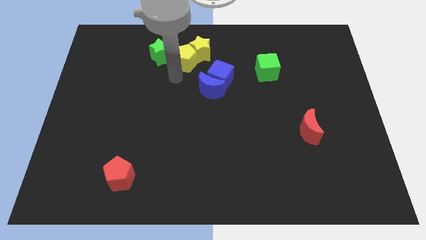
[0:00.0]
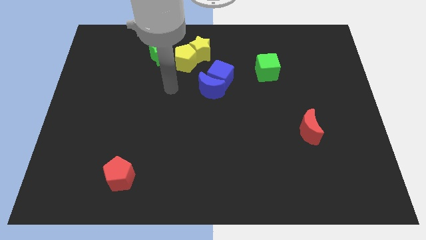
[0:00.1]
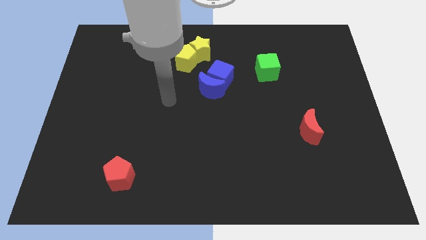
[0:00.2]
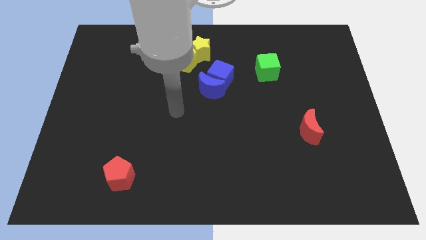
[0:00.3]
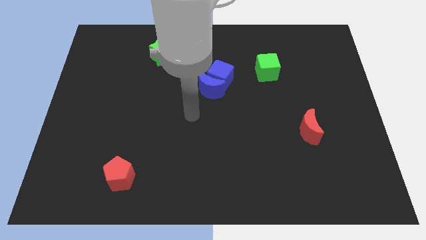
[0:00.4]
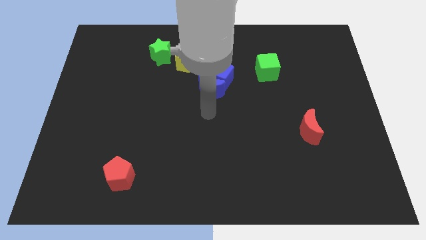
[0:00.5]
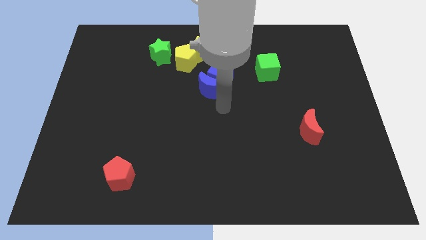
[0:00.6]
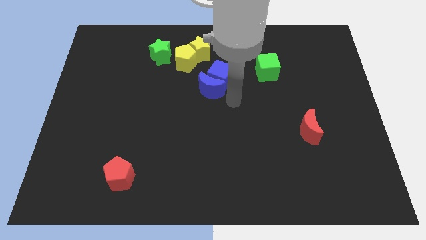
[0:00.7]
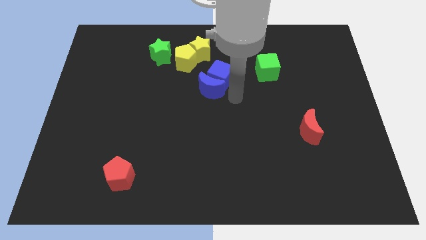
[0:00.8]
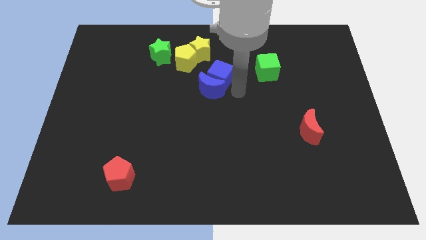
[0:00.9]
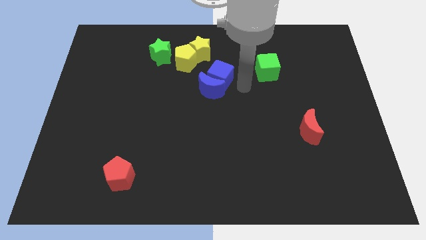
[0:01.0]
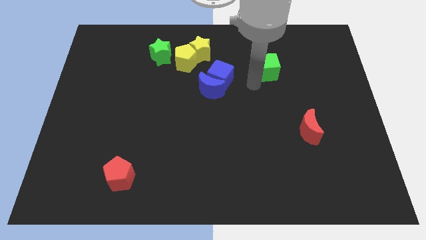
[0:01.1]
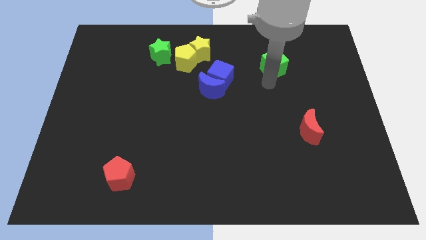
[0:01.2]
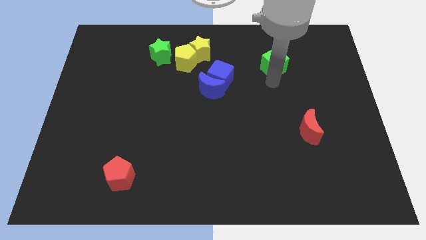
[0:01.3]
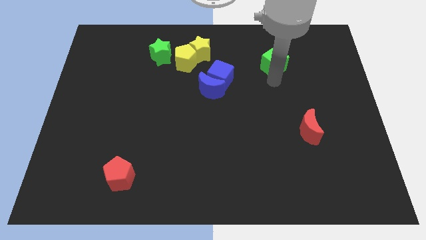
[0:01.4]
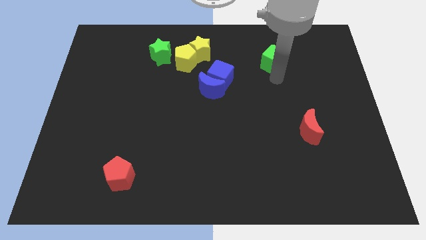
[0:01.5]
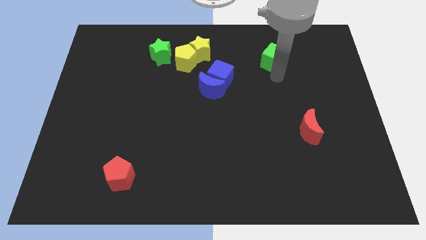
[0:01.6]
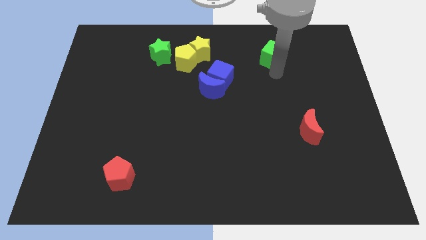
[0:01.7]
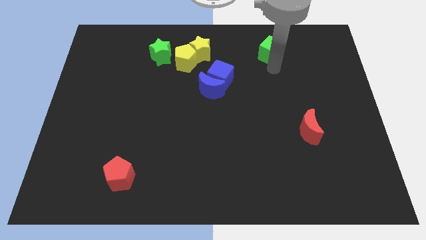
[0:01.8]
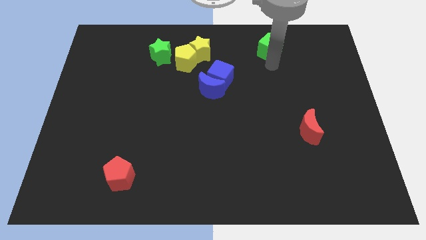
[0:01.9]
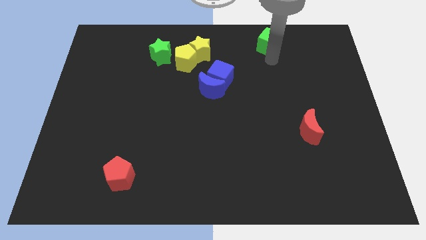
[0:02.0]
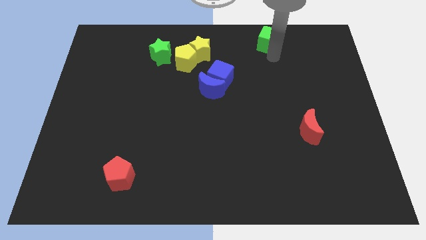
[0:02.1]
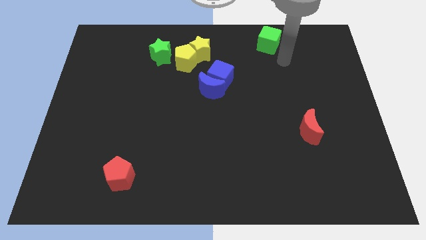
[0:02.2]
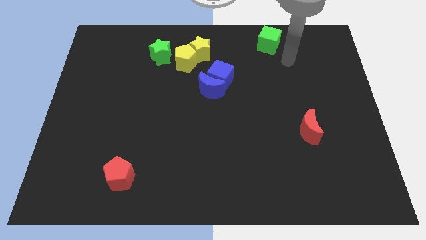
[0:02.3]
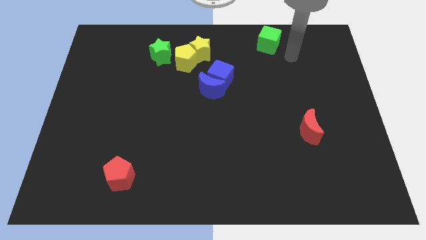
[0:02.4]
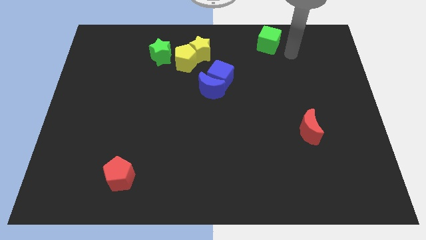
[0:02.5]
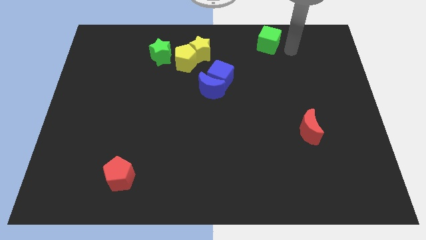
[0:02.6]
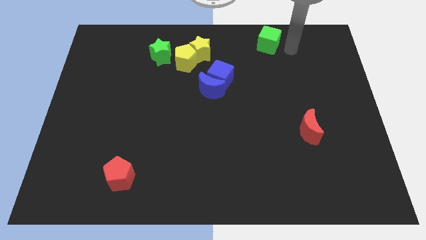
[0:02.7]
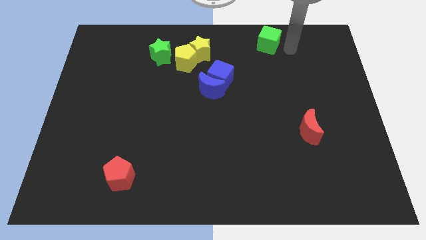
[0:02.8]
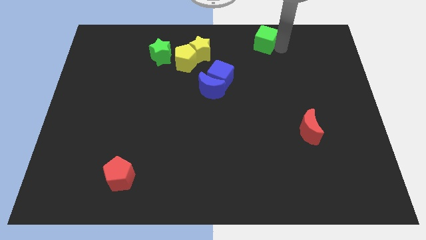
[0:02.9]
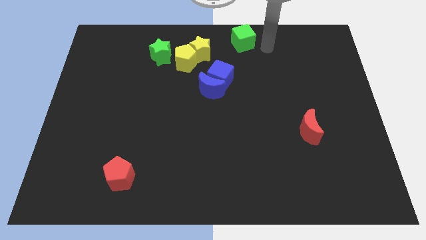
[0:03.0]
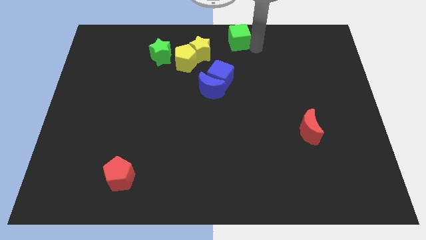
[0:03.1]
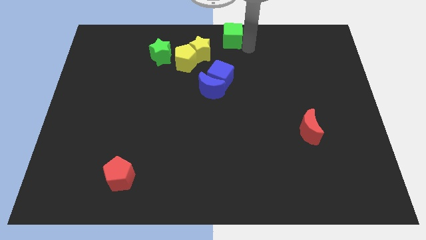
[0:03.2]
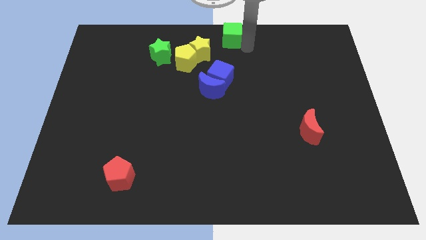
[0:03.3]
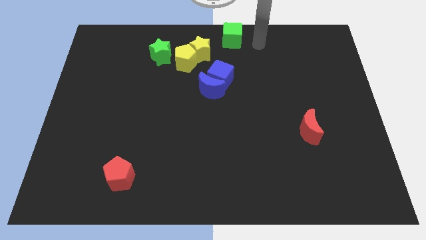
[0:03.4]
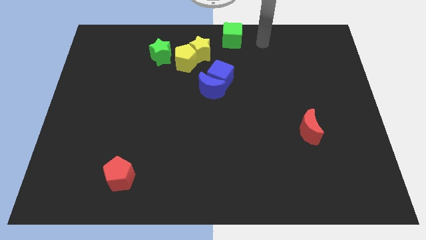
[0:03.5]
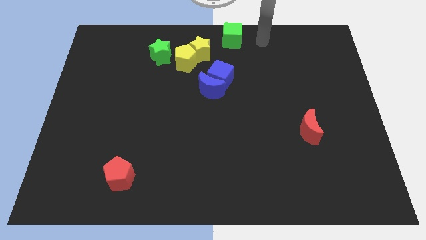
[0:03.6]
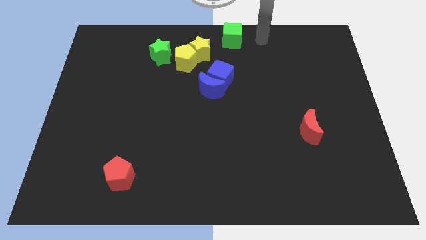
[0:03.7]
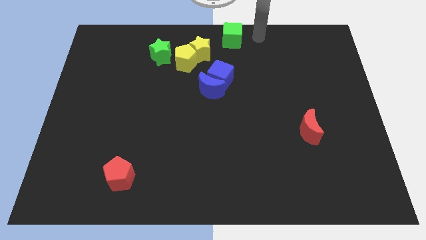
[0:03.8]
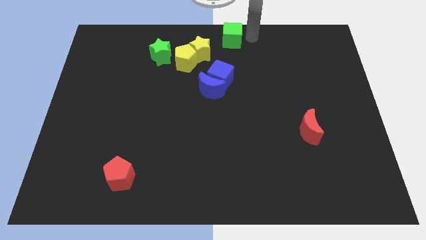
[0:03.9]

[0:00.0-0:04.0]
push green cube to the top center of the board

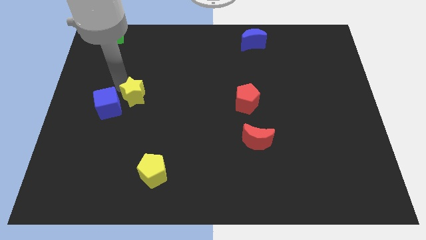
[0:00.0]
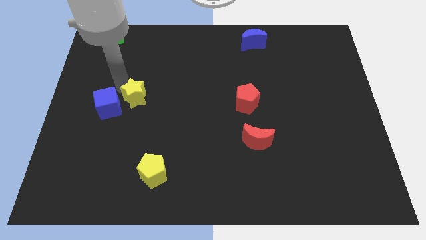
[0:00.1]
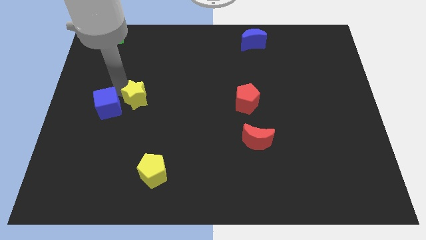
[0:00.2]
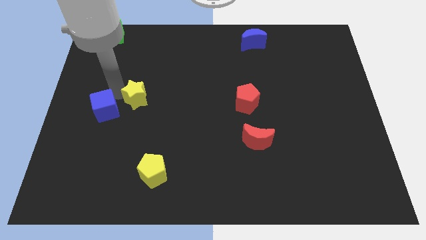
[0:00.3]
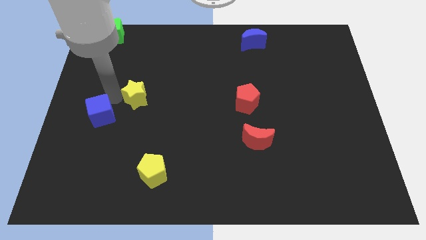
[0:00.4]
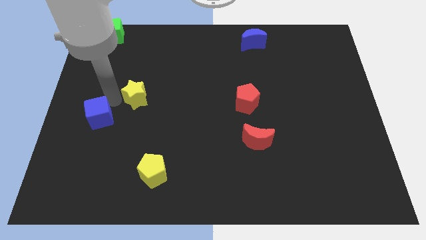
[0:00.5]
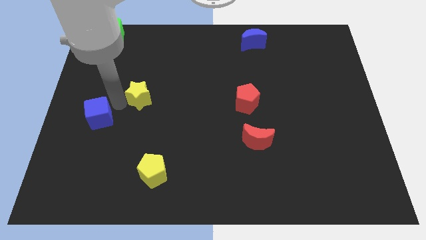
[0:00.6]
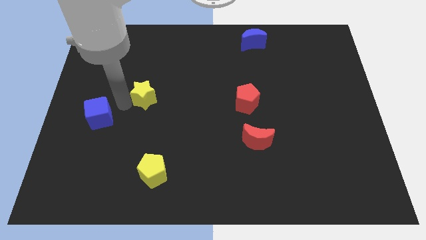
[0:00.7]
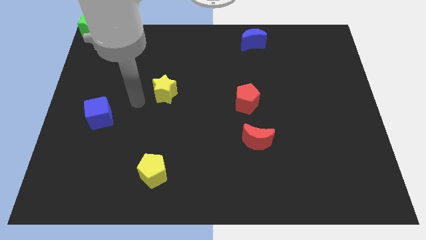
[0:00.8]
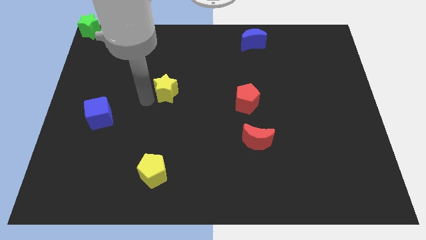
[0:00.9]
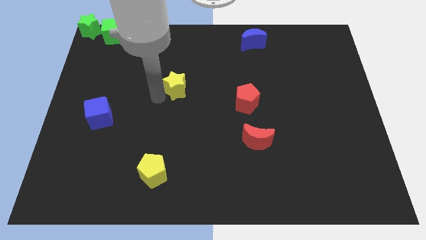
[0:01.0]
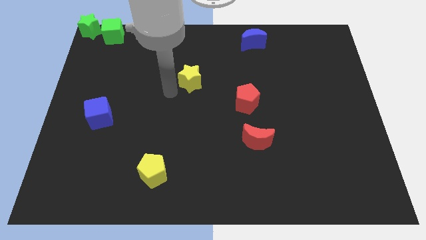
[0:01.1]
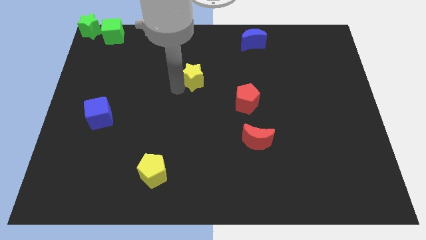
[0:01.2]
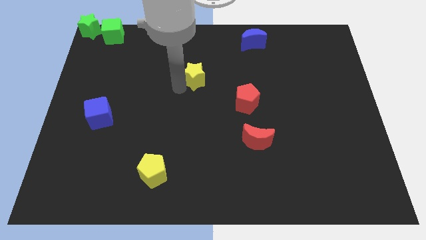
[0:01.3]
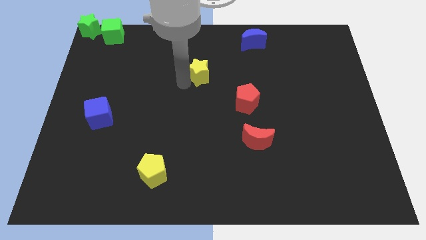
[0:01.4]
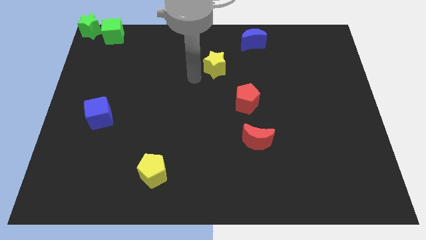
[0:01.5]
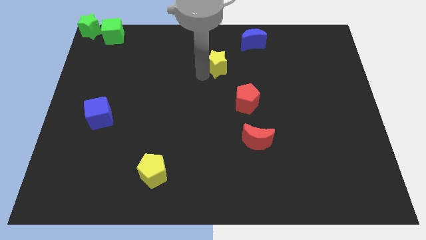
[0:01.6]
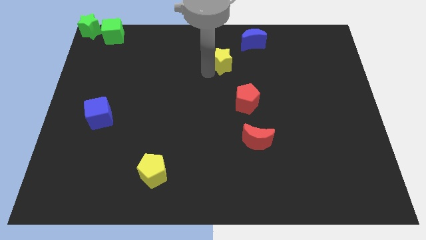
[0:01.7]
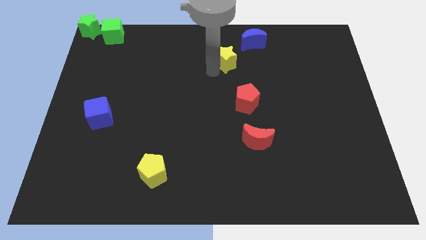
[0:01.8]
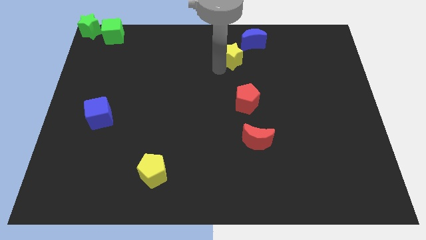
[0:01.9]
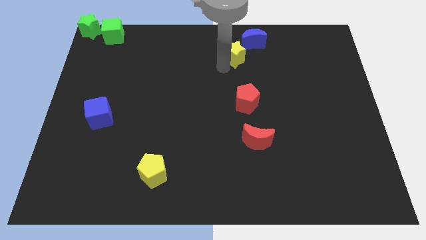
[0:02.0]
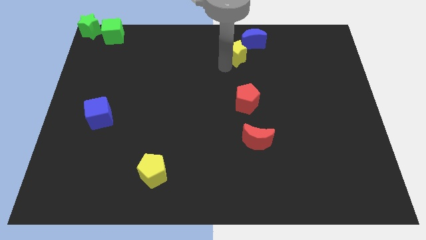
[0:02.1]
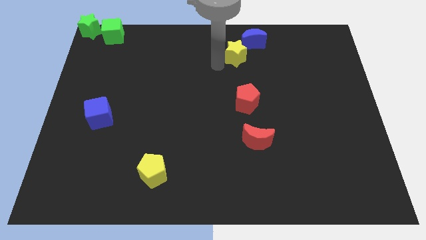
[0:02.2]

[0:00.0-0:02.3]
separate yellow star away from blue cube

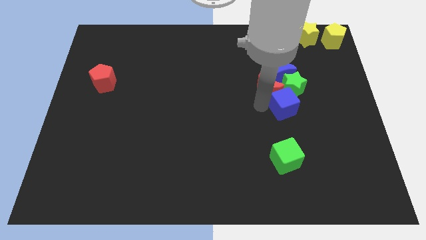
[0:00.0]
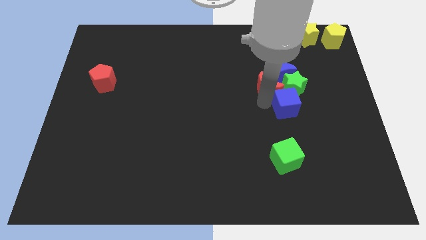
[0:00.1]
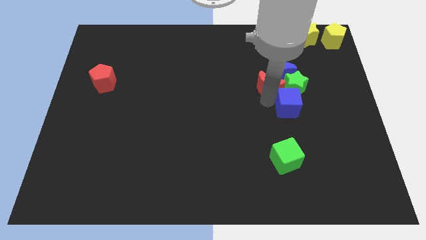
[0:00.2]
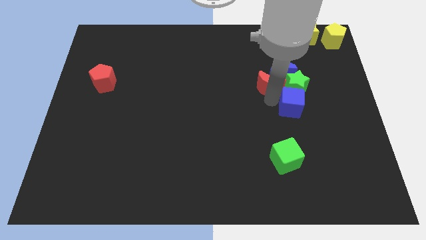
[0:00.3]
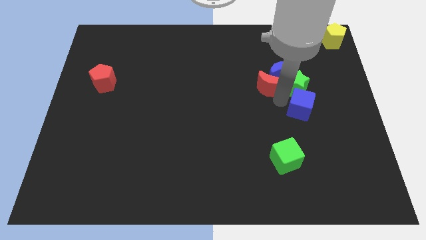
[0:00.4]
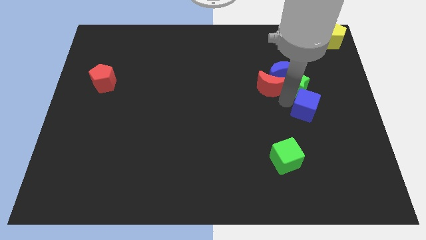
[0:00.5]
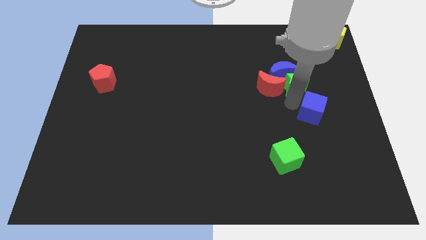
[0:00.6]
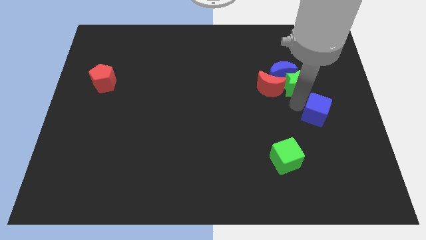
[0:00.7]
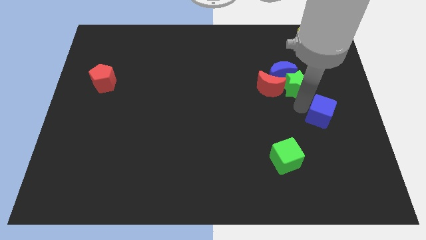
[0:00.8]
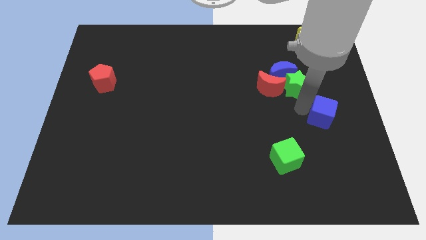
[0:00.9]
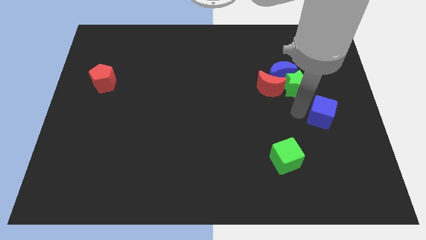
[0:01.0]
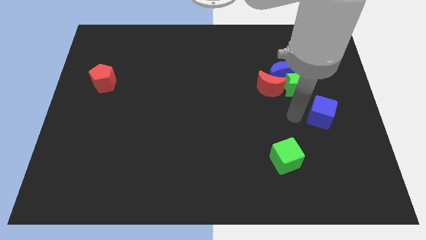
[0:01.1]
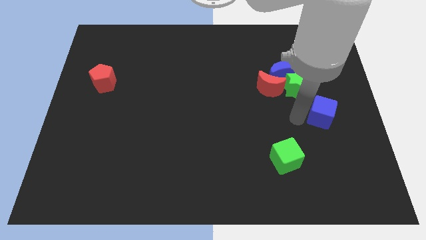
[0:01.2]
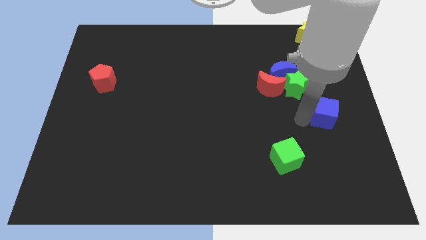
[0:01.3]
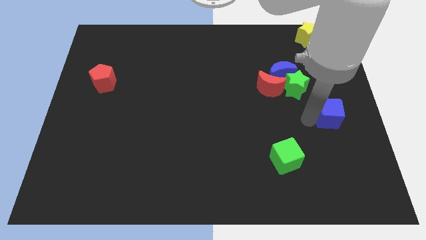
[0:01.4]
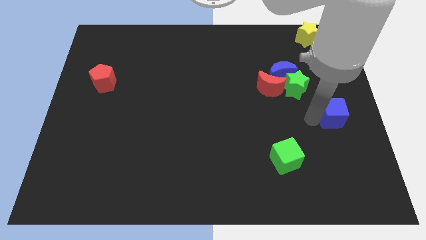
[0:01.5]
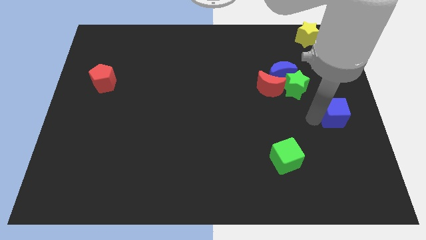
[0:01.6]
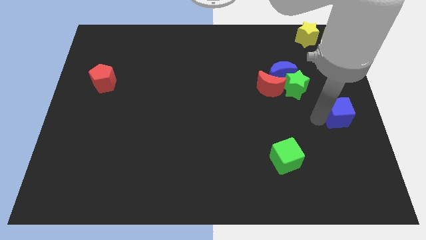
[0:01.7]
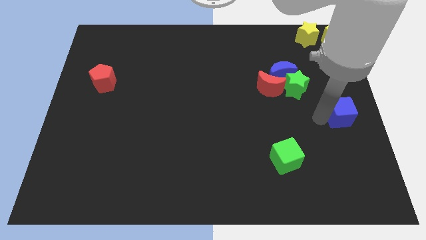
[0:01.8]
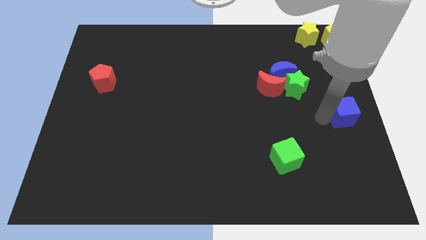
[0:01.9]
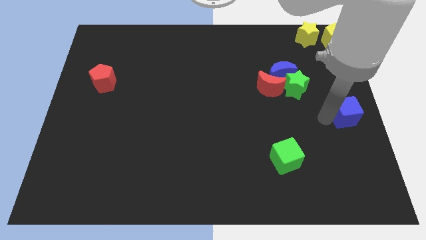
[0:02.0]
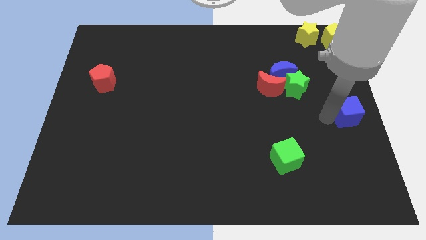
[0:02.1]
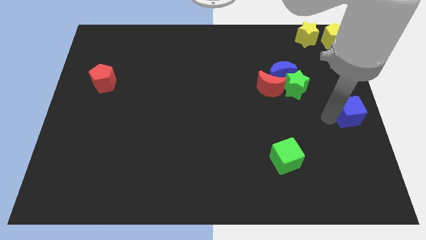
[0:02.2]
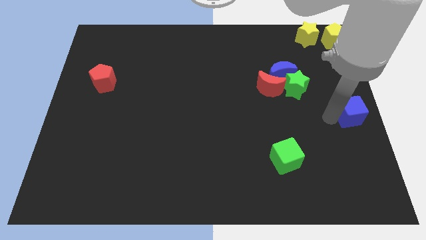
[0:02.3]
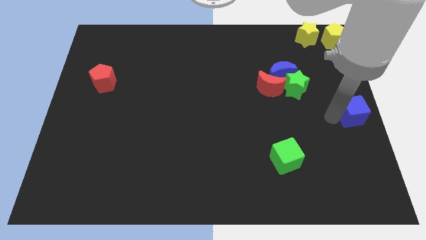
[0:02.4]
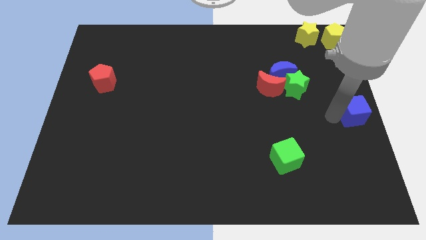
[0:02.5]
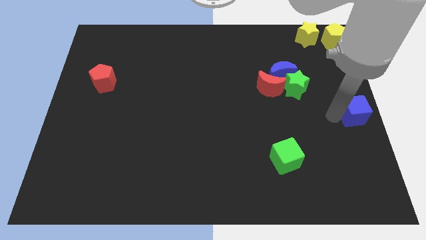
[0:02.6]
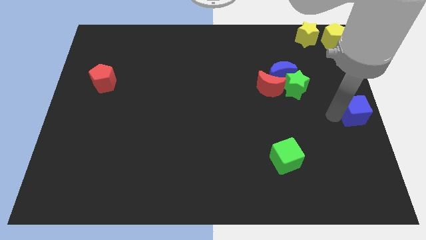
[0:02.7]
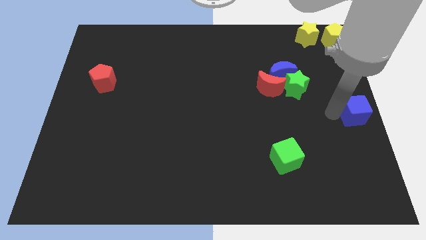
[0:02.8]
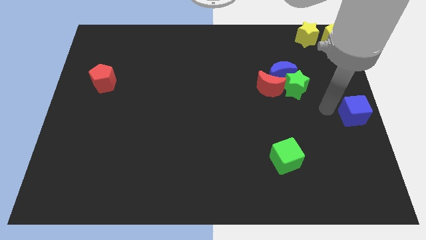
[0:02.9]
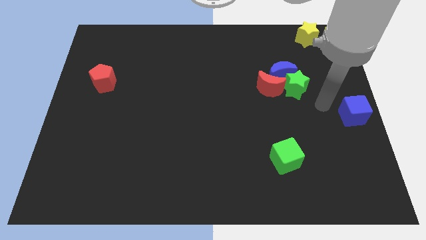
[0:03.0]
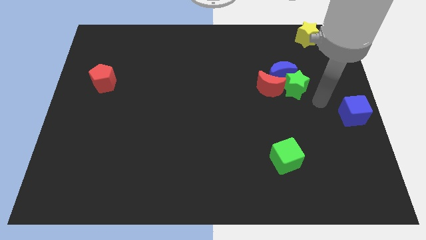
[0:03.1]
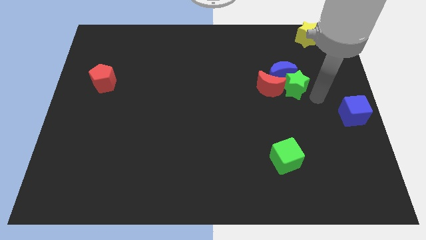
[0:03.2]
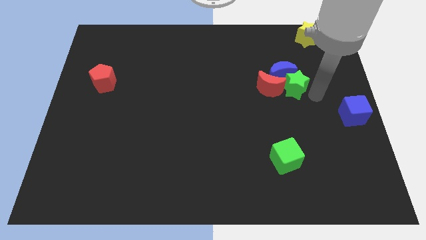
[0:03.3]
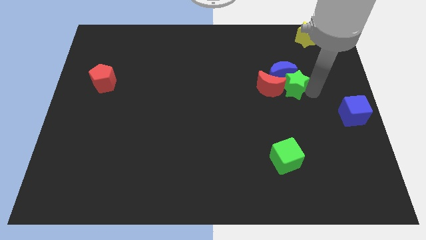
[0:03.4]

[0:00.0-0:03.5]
push blue cube to the right center of the board
